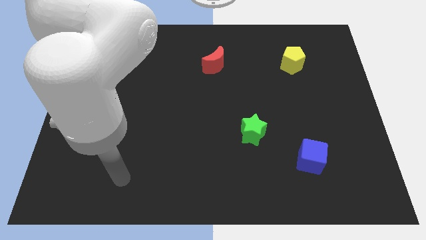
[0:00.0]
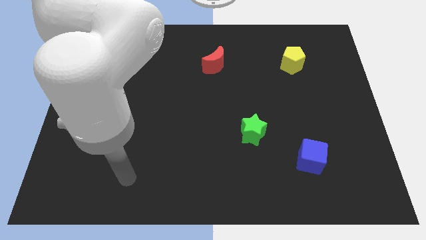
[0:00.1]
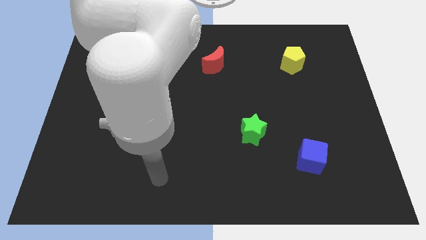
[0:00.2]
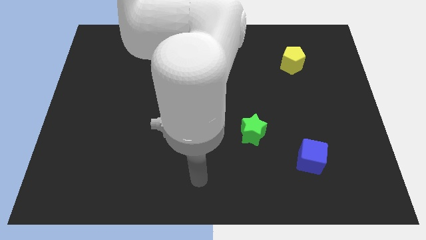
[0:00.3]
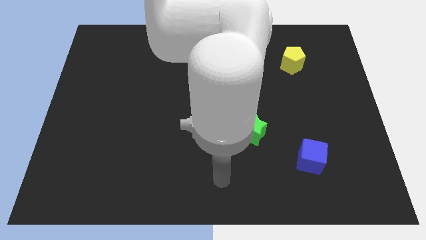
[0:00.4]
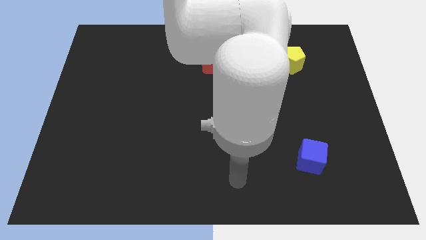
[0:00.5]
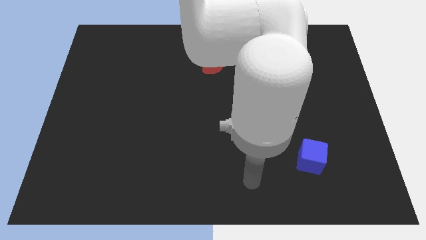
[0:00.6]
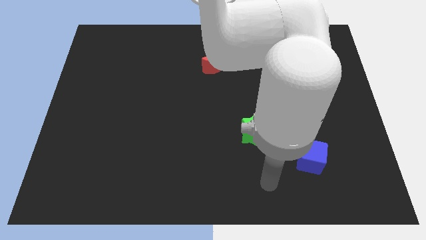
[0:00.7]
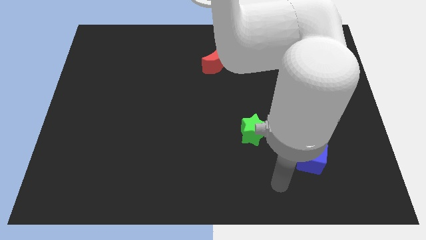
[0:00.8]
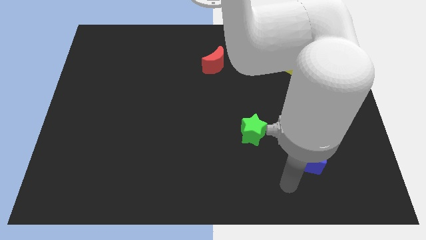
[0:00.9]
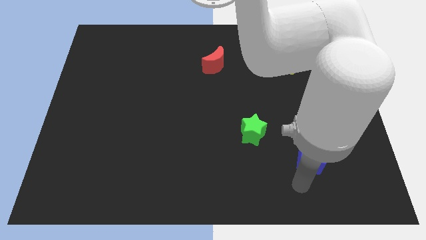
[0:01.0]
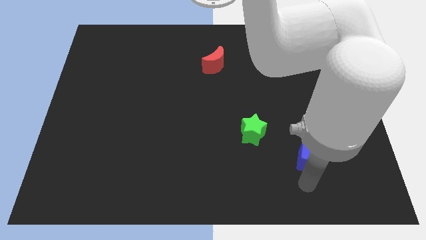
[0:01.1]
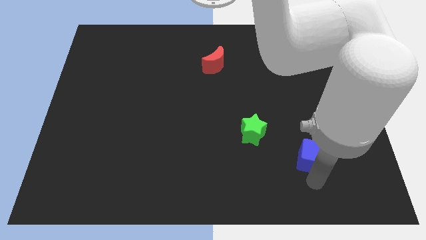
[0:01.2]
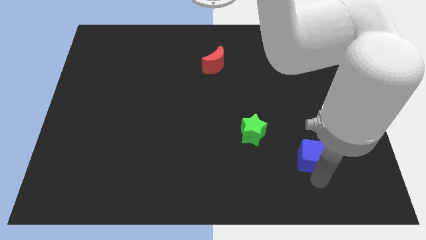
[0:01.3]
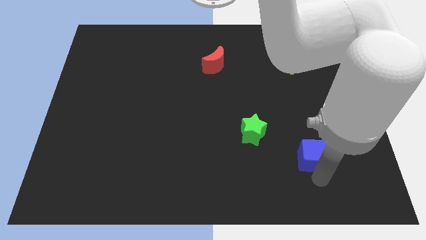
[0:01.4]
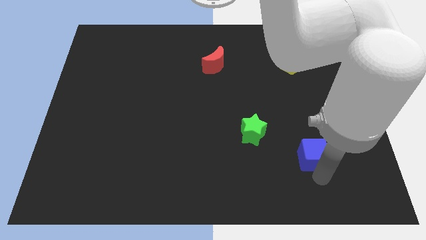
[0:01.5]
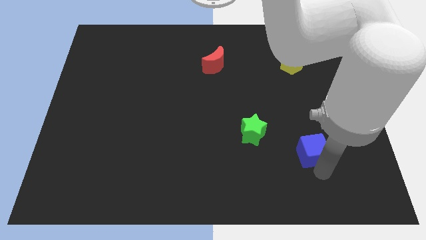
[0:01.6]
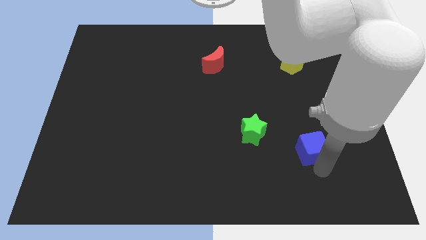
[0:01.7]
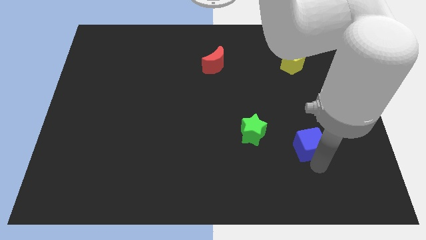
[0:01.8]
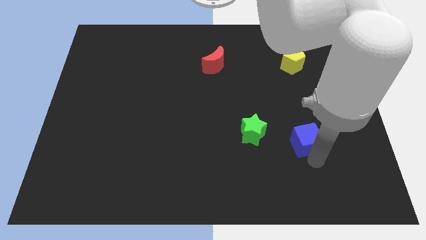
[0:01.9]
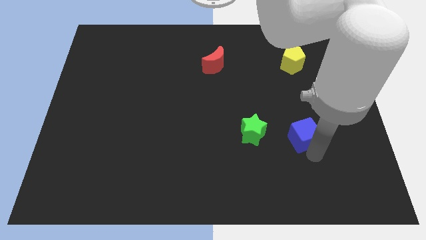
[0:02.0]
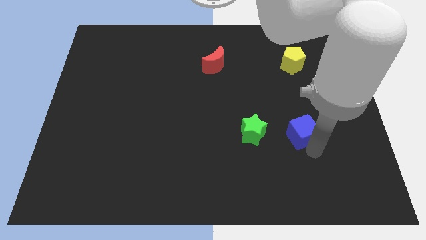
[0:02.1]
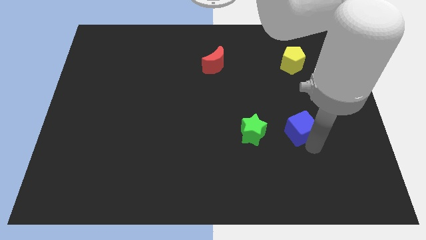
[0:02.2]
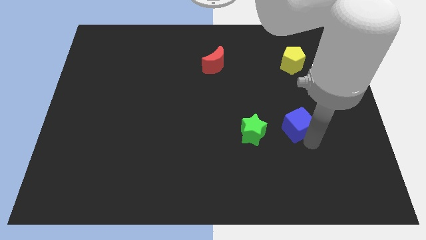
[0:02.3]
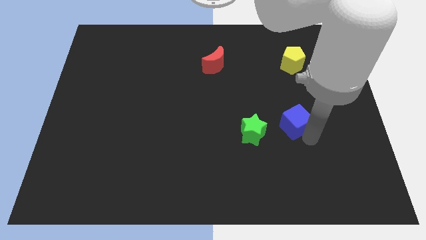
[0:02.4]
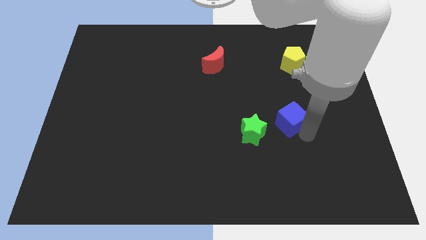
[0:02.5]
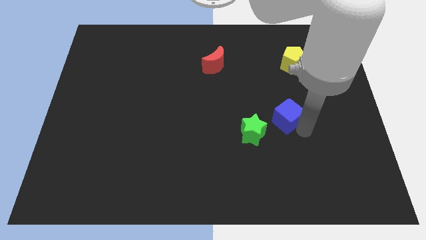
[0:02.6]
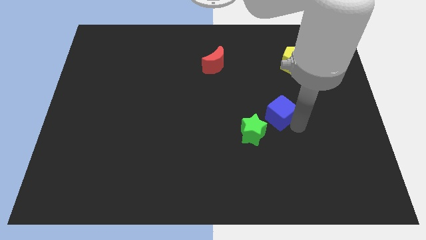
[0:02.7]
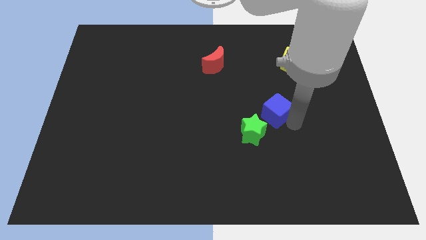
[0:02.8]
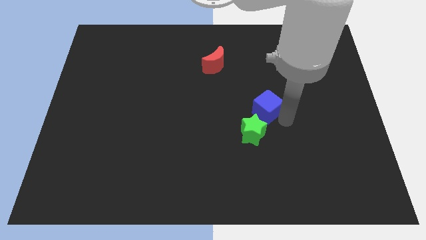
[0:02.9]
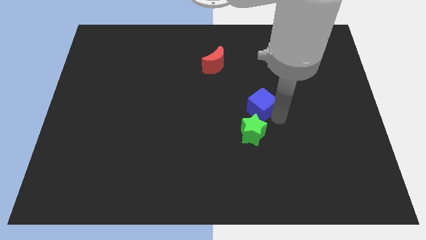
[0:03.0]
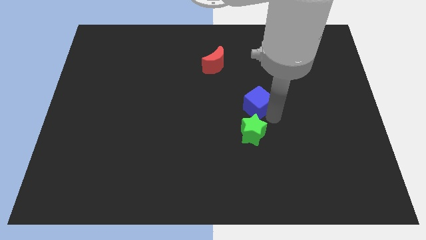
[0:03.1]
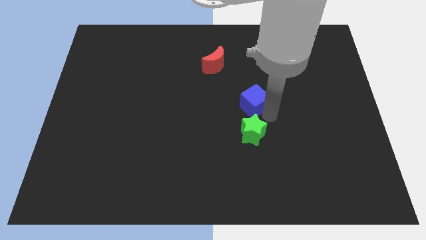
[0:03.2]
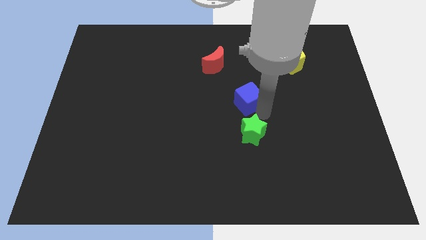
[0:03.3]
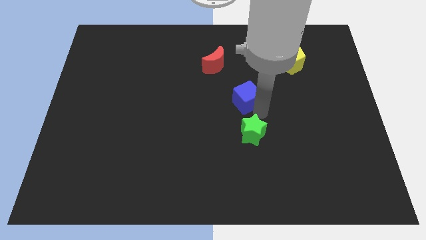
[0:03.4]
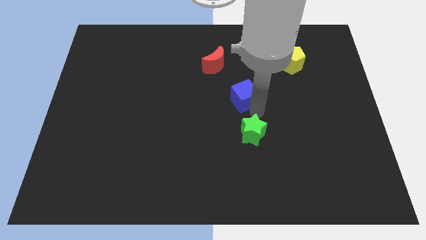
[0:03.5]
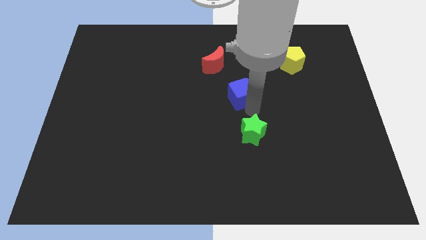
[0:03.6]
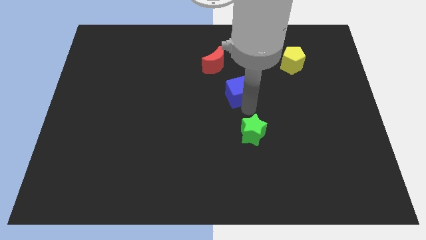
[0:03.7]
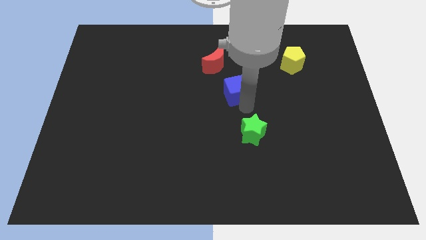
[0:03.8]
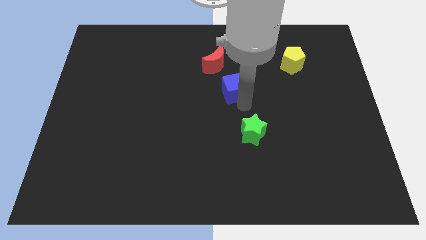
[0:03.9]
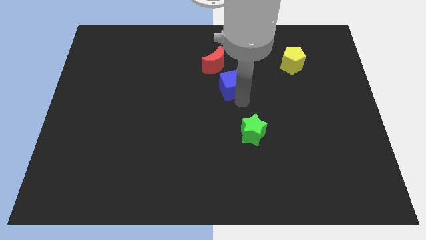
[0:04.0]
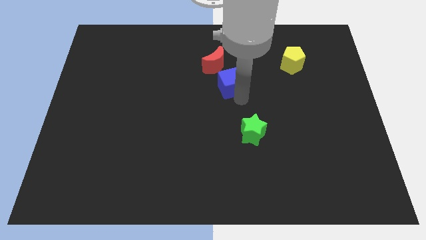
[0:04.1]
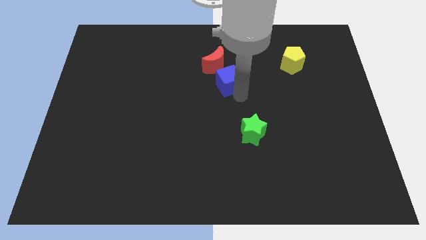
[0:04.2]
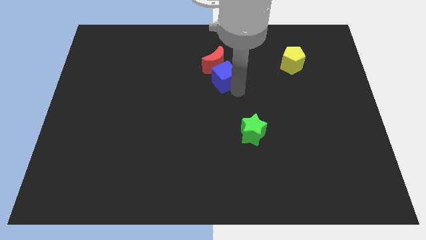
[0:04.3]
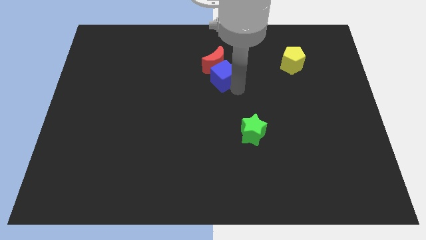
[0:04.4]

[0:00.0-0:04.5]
move the blue cube to the red moon

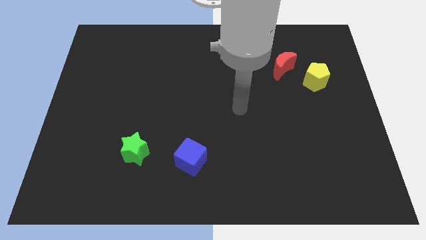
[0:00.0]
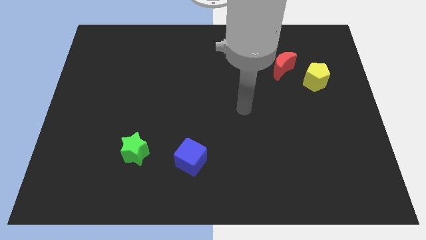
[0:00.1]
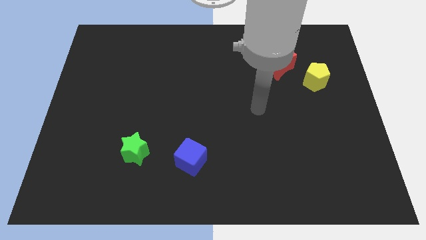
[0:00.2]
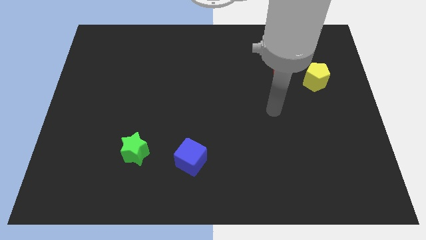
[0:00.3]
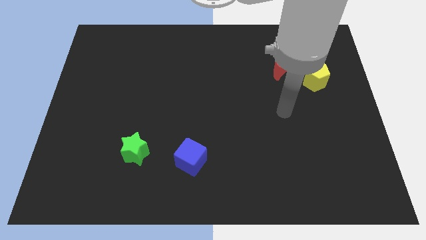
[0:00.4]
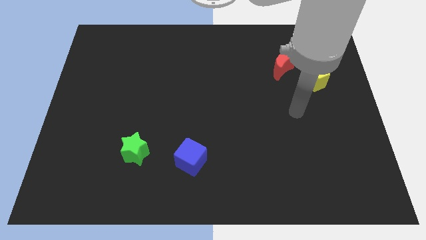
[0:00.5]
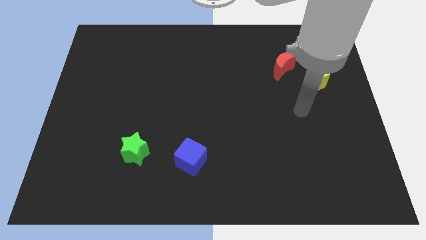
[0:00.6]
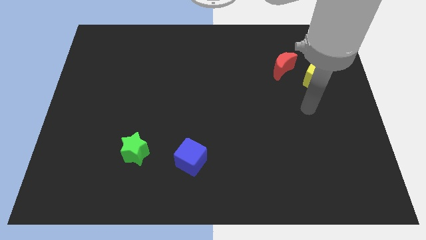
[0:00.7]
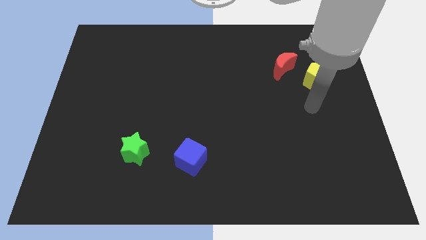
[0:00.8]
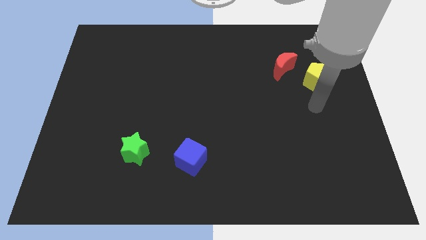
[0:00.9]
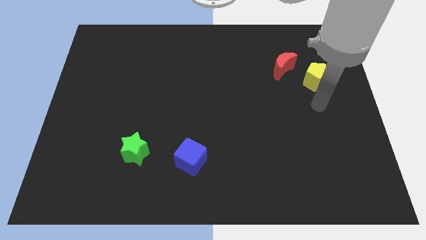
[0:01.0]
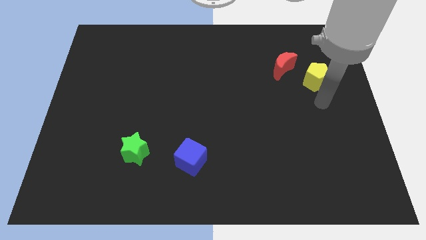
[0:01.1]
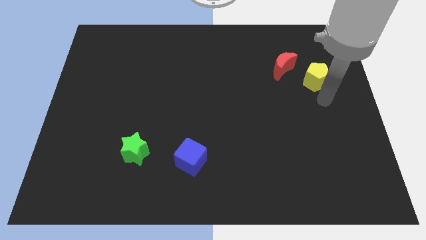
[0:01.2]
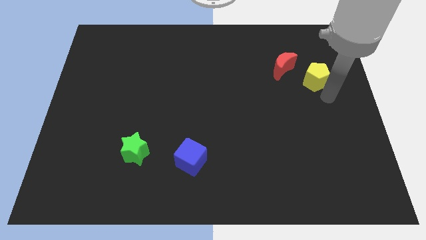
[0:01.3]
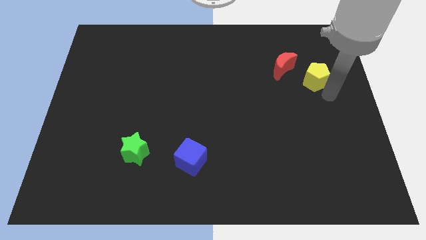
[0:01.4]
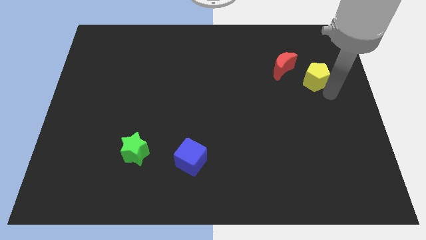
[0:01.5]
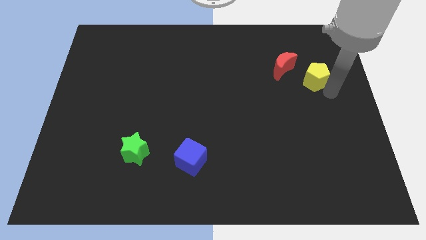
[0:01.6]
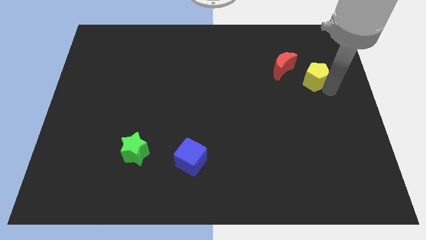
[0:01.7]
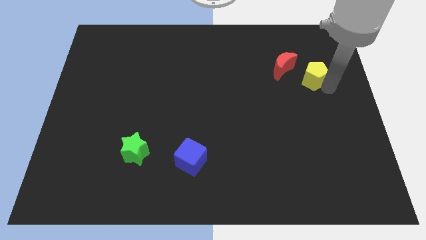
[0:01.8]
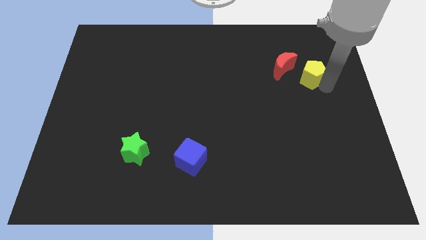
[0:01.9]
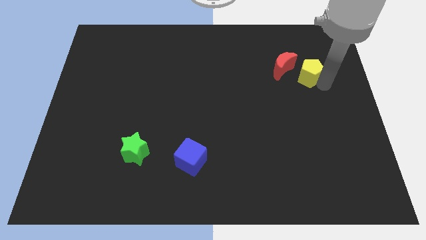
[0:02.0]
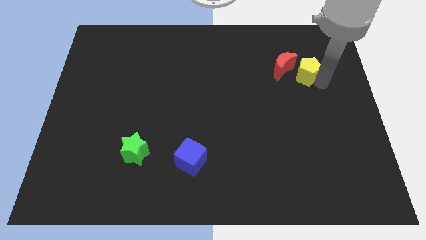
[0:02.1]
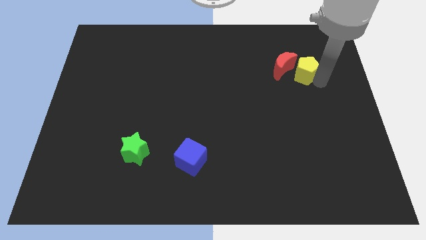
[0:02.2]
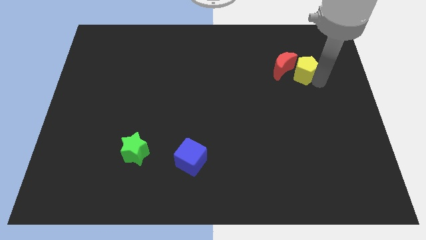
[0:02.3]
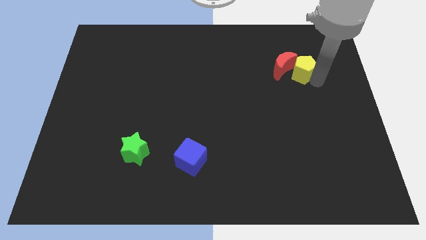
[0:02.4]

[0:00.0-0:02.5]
push the pentagon close to the moon

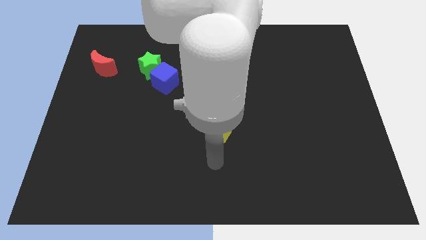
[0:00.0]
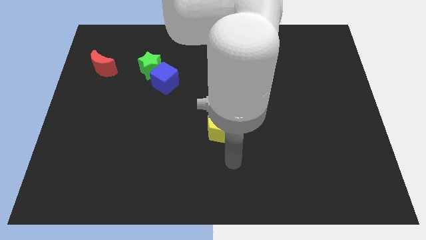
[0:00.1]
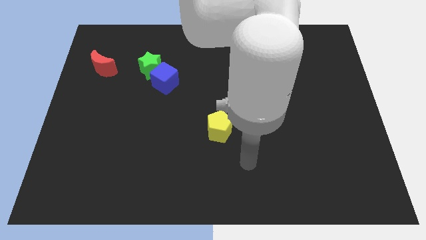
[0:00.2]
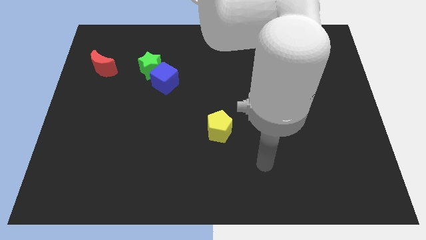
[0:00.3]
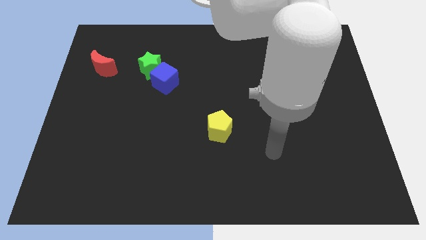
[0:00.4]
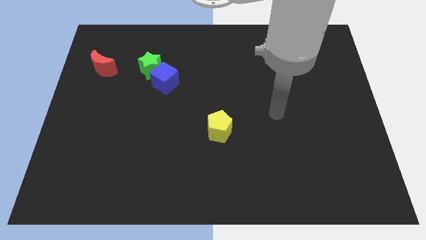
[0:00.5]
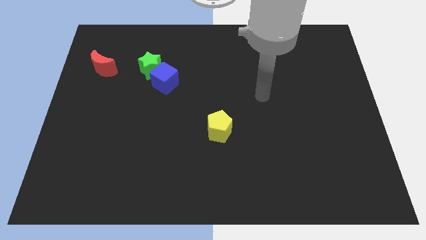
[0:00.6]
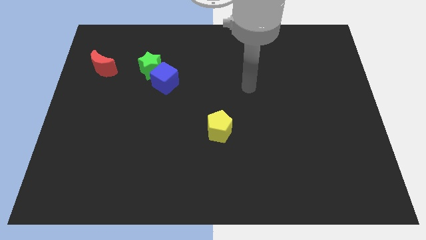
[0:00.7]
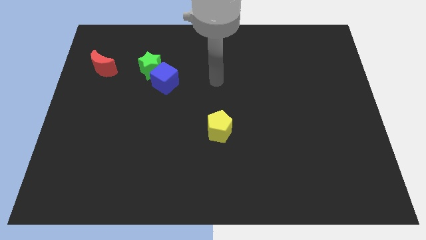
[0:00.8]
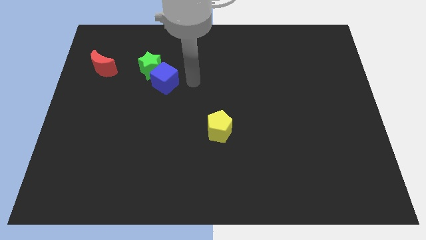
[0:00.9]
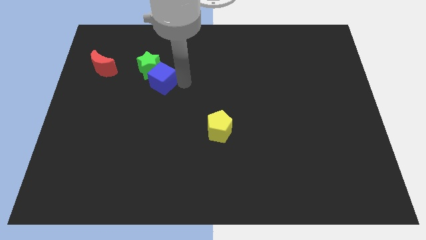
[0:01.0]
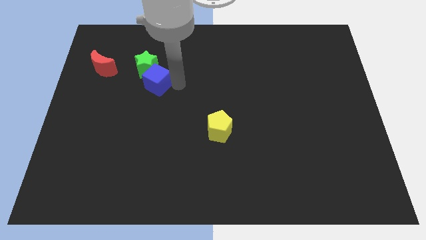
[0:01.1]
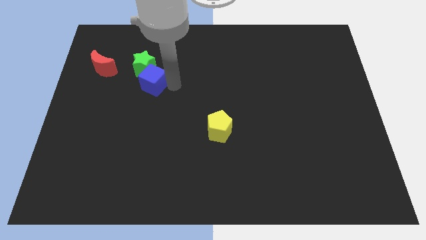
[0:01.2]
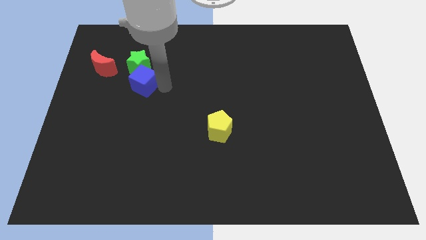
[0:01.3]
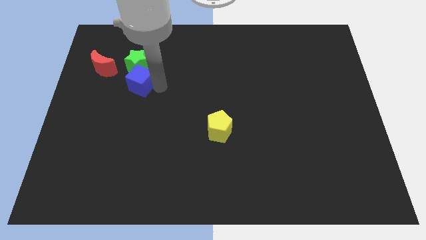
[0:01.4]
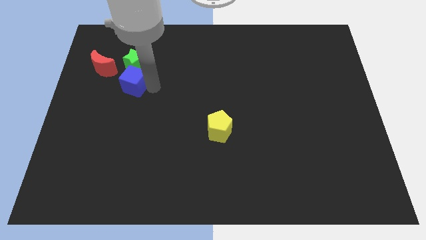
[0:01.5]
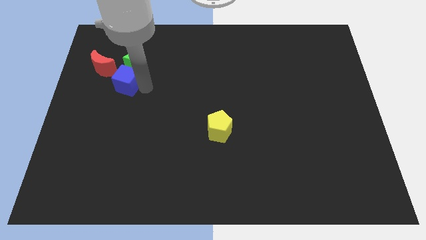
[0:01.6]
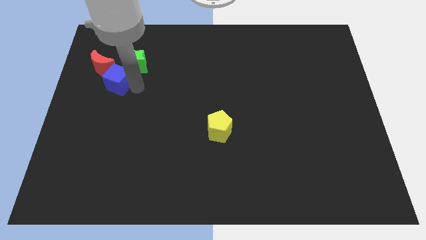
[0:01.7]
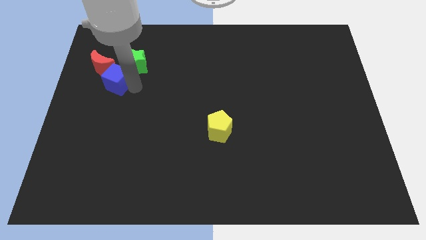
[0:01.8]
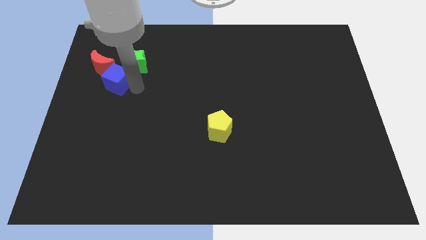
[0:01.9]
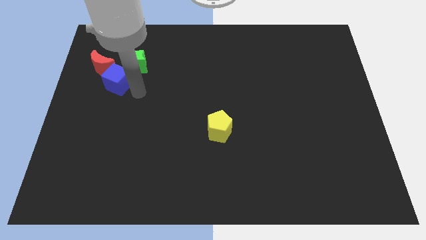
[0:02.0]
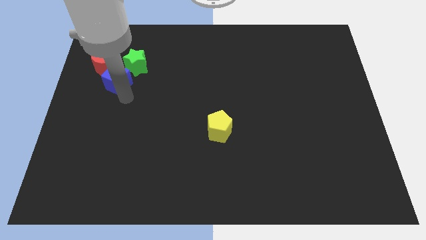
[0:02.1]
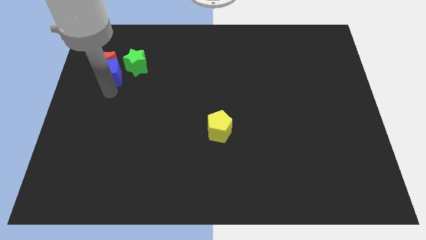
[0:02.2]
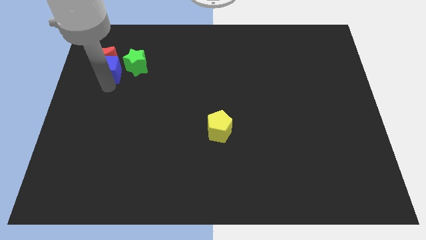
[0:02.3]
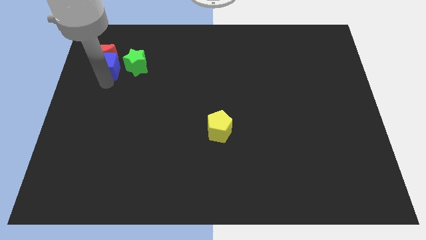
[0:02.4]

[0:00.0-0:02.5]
move the blue block close to the red moon
